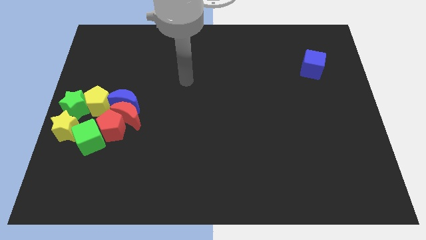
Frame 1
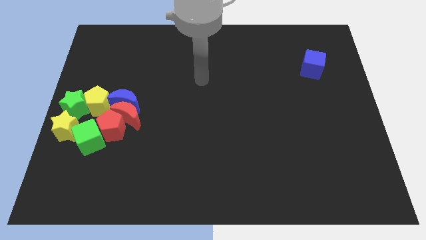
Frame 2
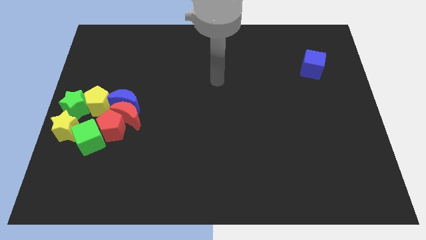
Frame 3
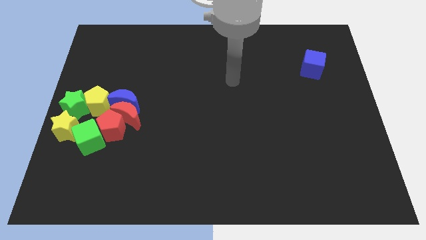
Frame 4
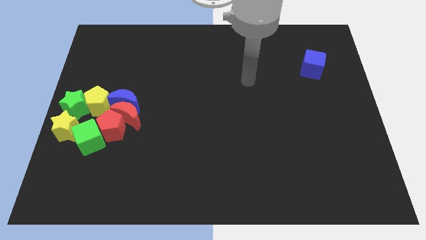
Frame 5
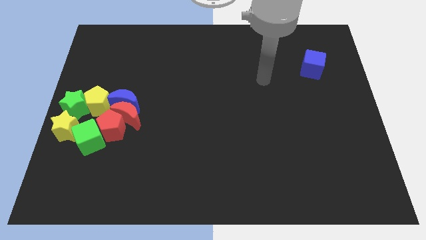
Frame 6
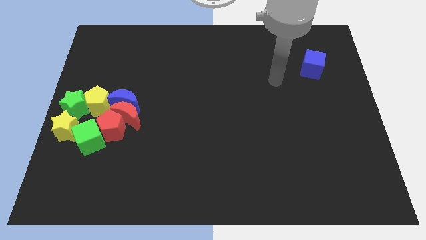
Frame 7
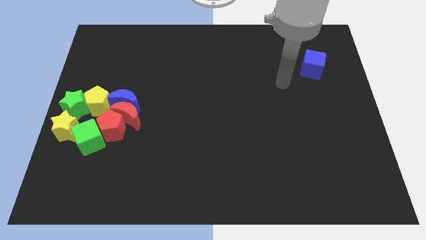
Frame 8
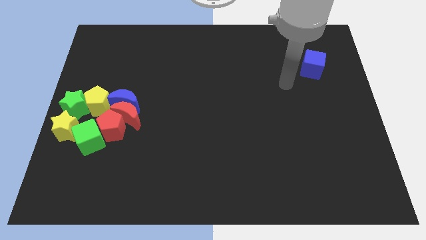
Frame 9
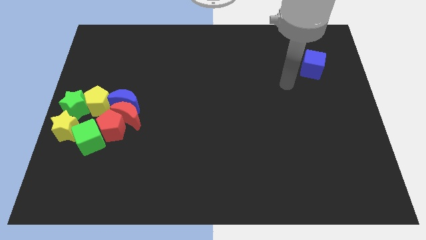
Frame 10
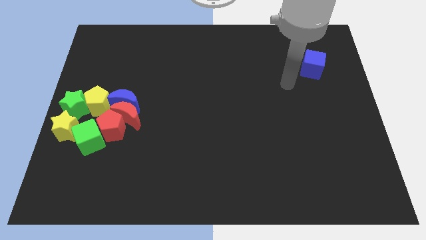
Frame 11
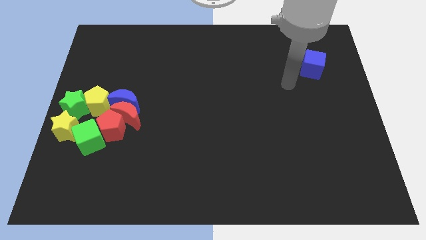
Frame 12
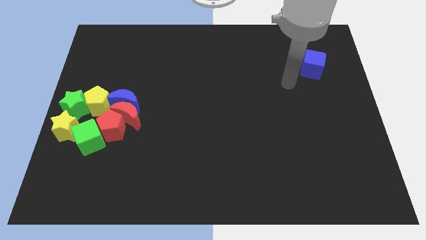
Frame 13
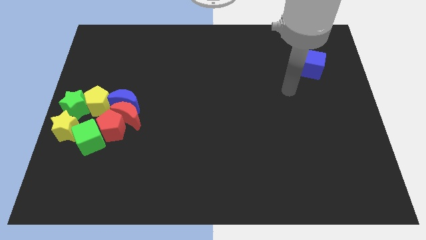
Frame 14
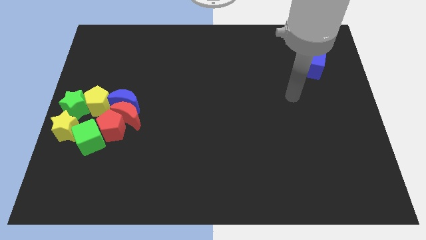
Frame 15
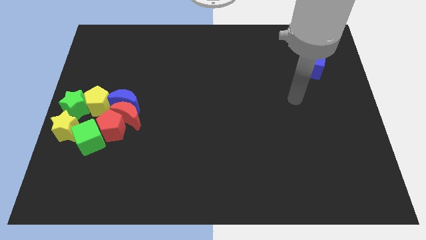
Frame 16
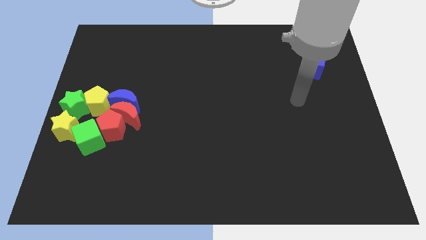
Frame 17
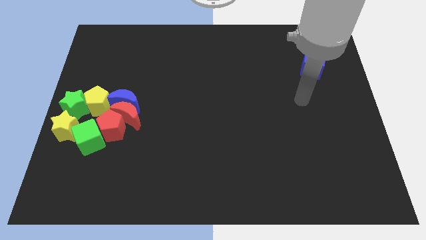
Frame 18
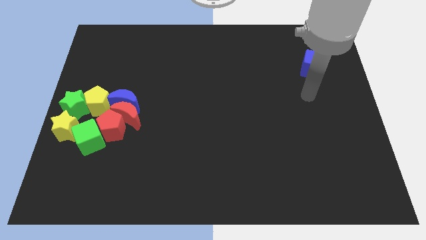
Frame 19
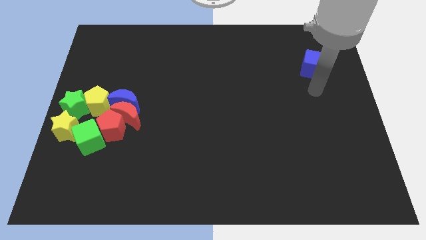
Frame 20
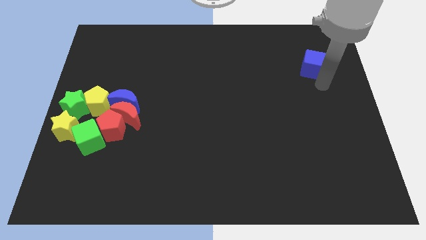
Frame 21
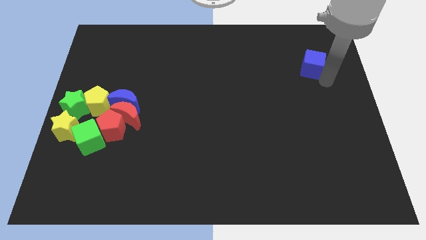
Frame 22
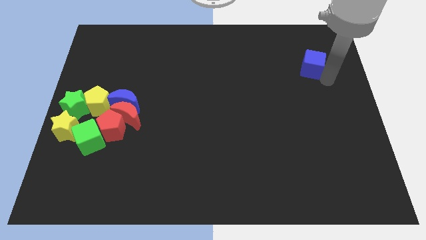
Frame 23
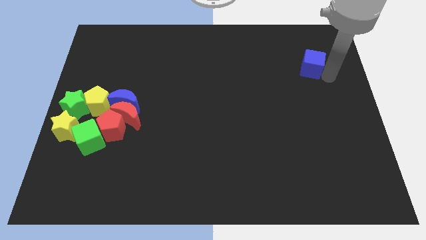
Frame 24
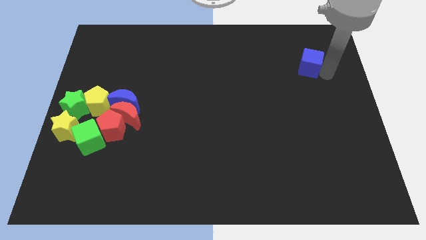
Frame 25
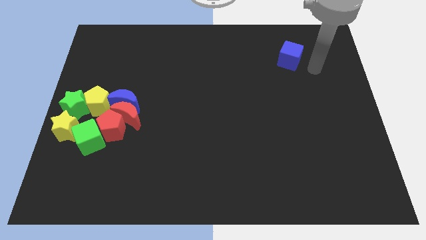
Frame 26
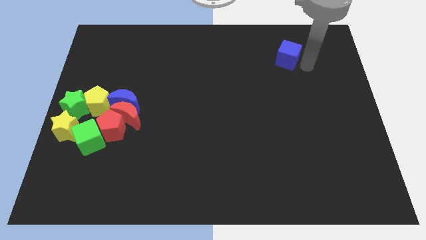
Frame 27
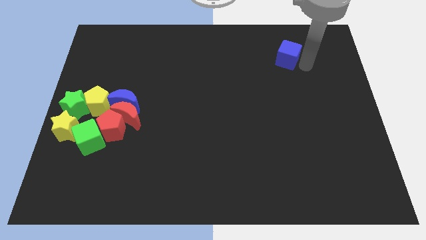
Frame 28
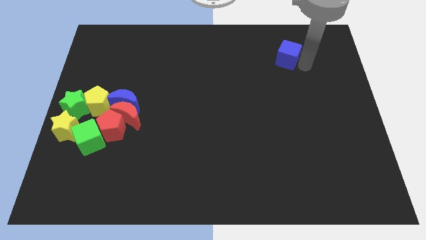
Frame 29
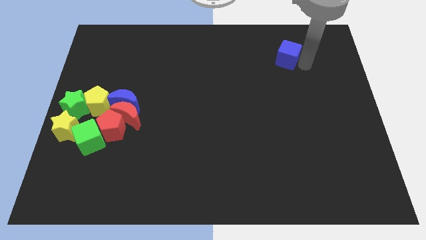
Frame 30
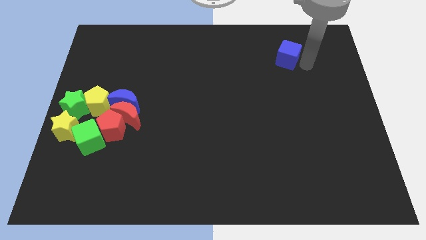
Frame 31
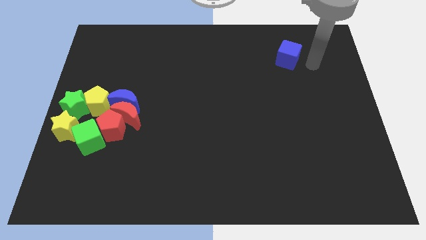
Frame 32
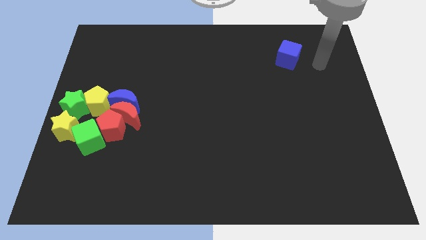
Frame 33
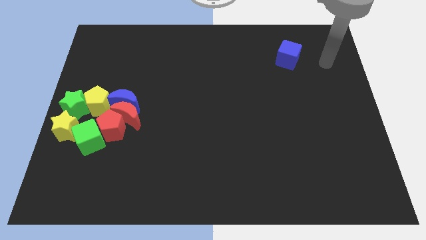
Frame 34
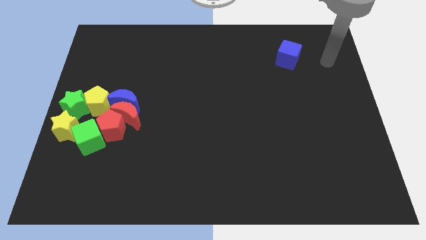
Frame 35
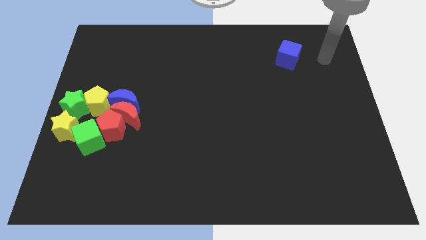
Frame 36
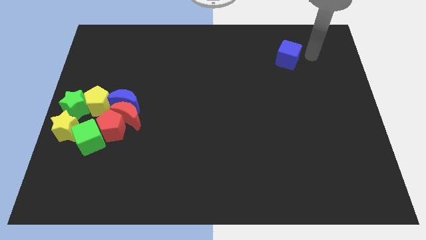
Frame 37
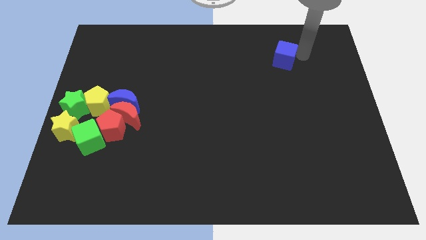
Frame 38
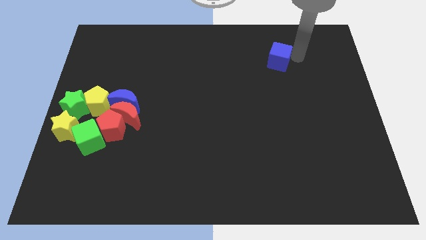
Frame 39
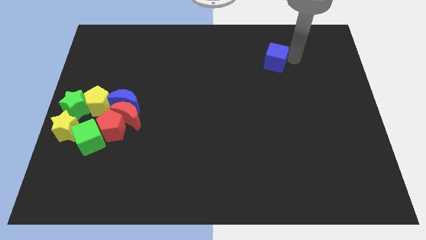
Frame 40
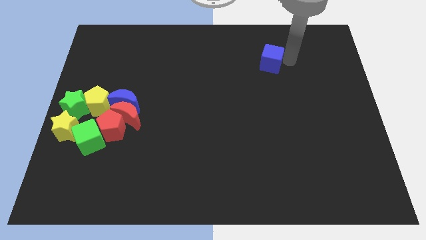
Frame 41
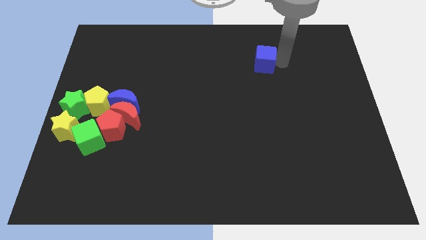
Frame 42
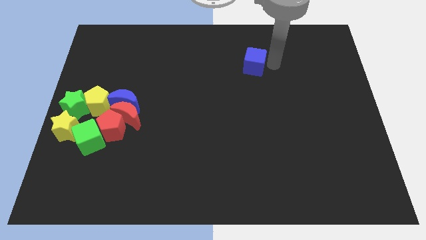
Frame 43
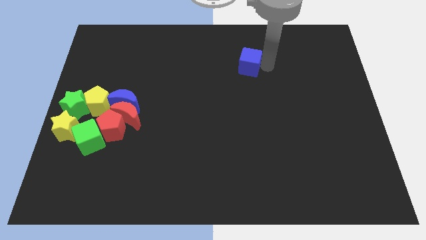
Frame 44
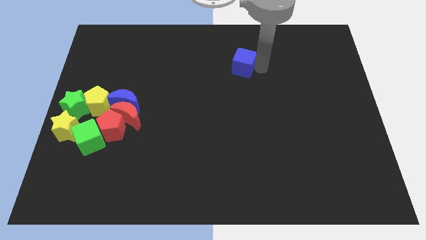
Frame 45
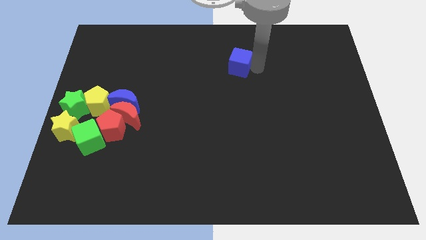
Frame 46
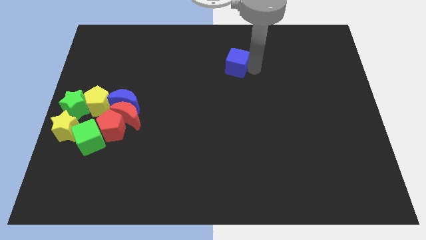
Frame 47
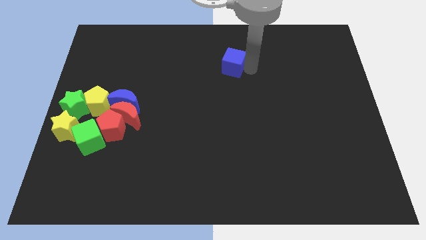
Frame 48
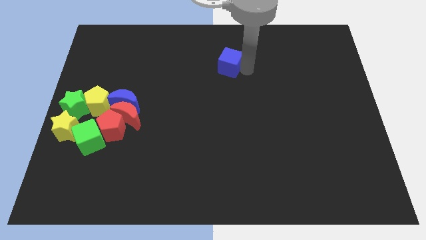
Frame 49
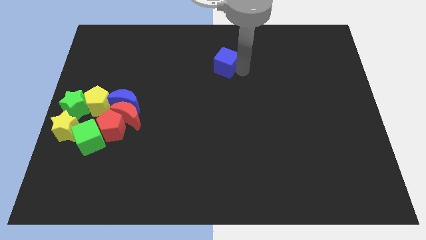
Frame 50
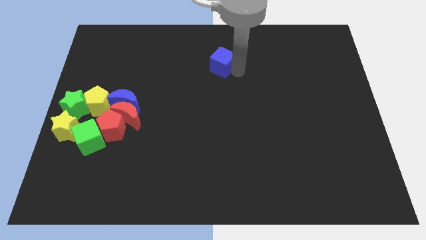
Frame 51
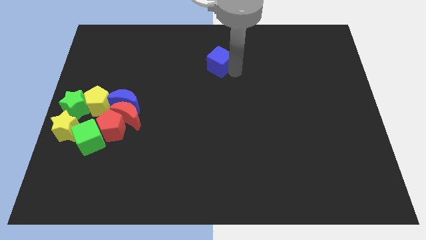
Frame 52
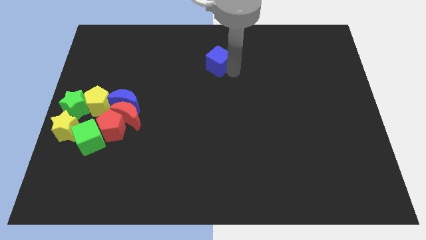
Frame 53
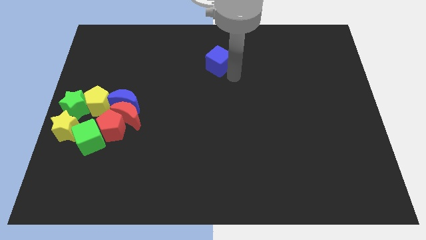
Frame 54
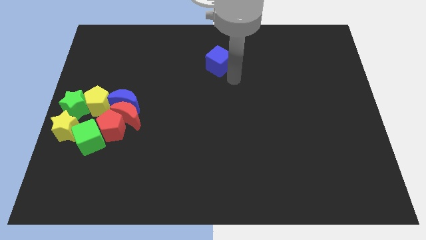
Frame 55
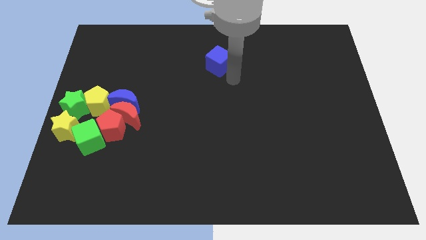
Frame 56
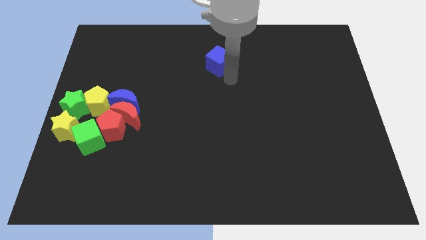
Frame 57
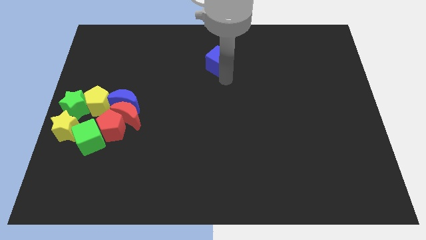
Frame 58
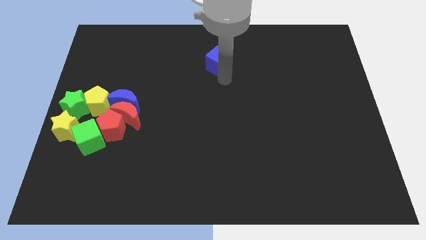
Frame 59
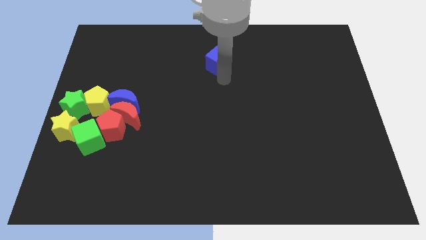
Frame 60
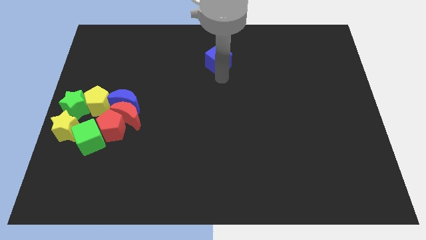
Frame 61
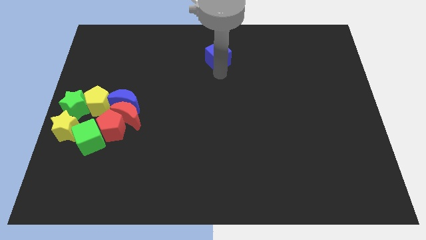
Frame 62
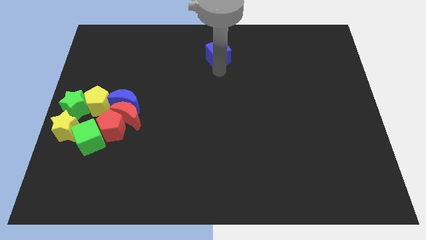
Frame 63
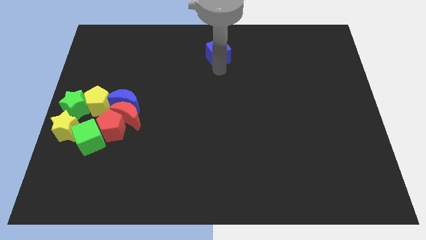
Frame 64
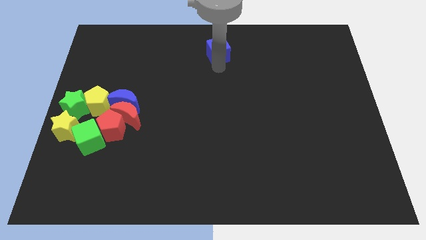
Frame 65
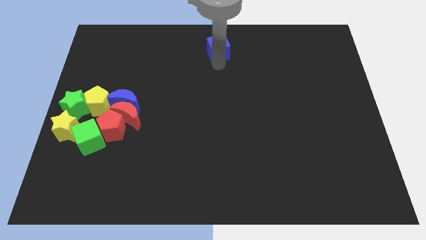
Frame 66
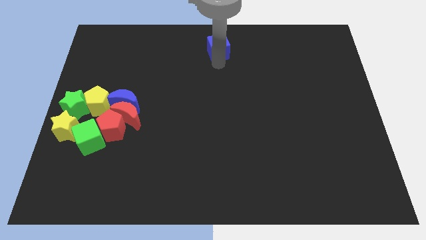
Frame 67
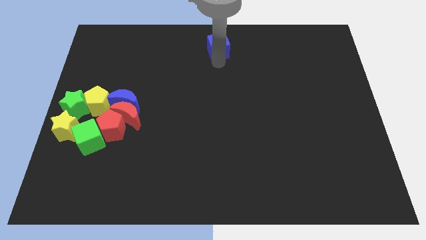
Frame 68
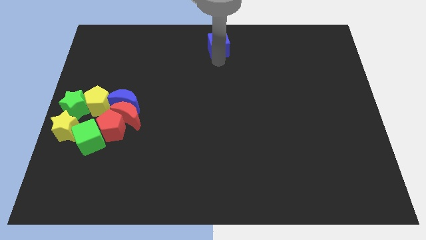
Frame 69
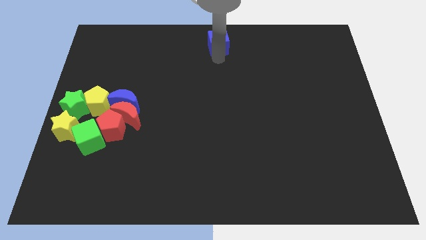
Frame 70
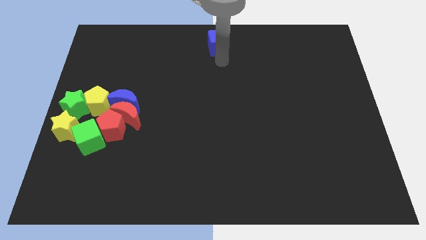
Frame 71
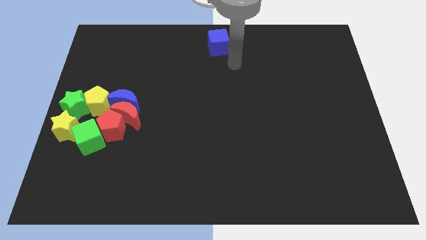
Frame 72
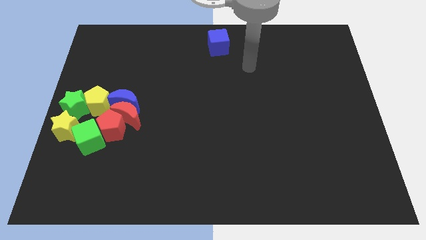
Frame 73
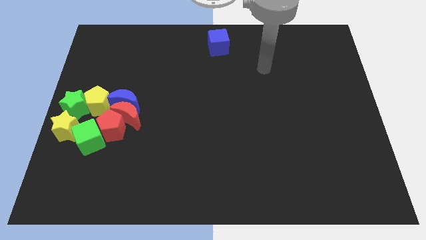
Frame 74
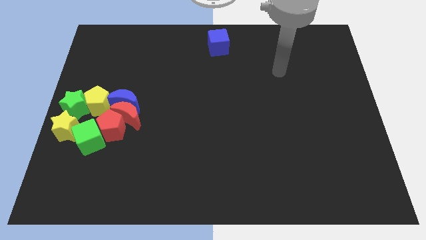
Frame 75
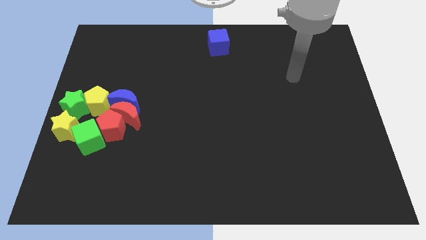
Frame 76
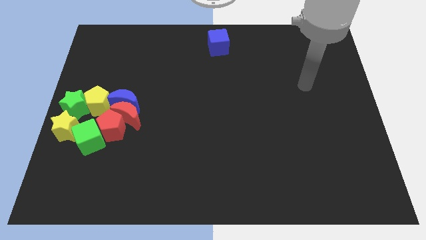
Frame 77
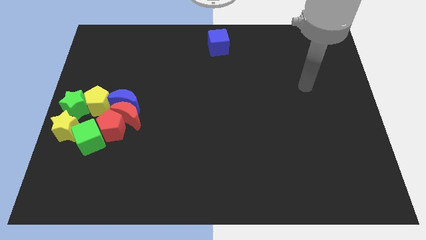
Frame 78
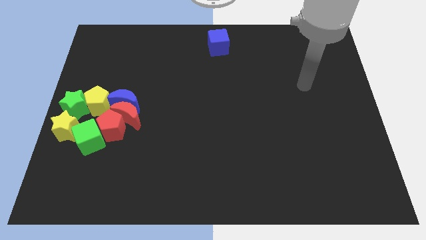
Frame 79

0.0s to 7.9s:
move the blue cube to the top center of the board

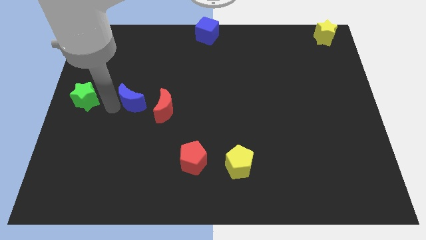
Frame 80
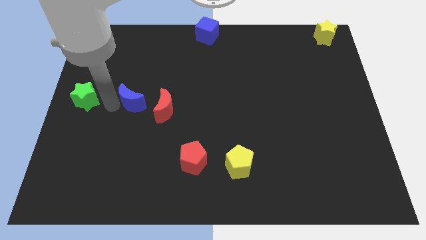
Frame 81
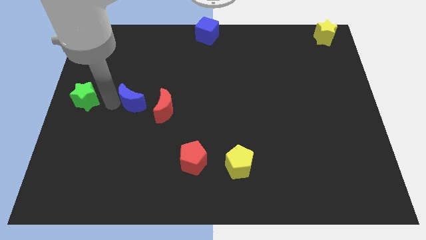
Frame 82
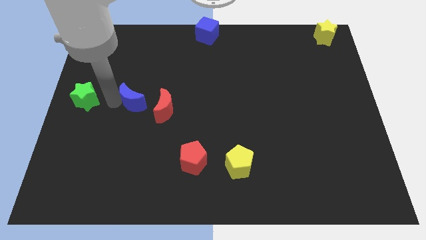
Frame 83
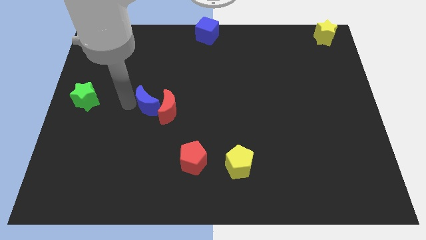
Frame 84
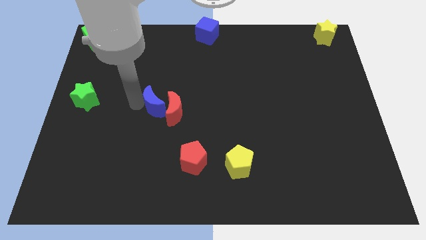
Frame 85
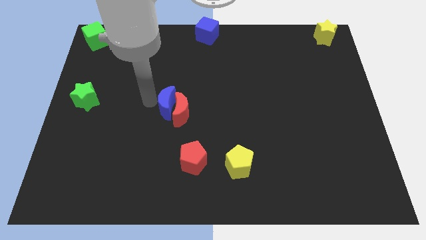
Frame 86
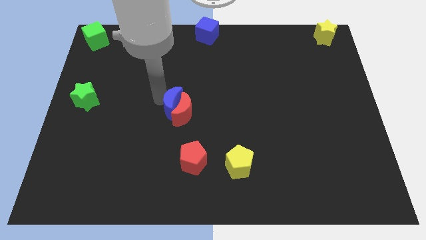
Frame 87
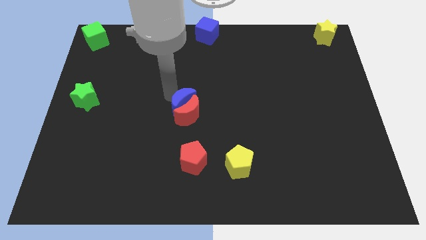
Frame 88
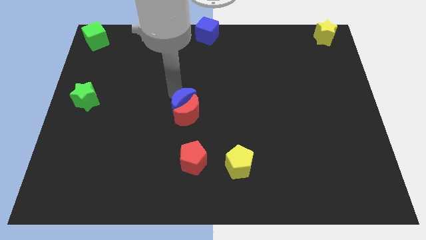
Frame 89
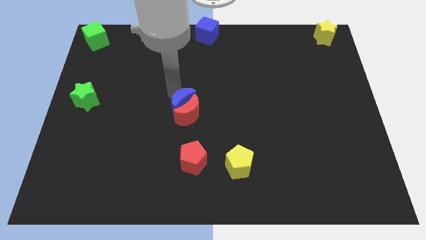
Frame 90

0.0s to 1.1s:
push the blue moon into the red moon
